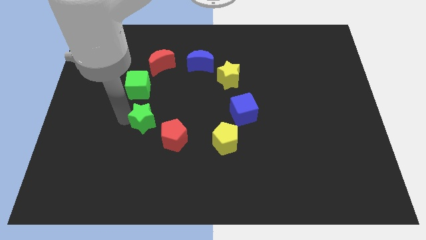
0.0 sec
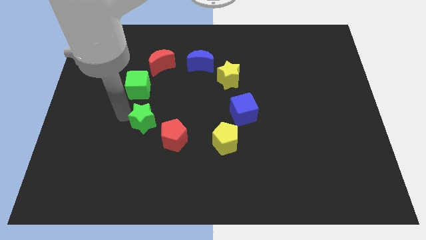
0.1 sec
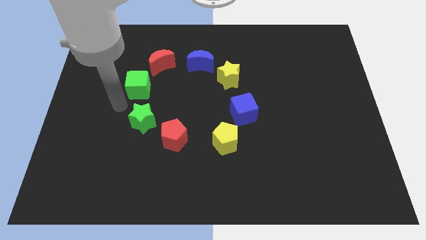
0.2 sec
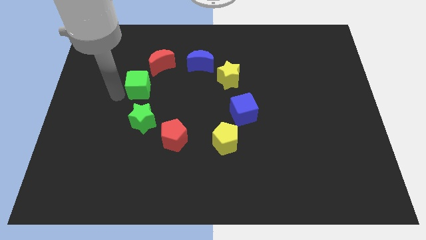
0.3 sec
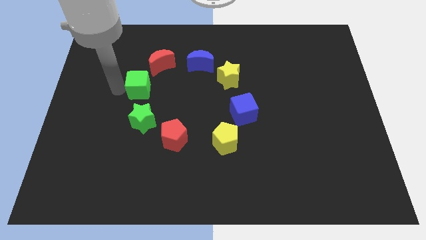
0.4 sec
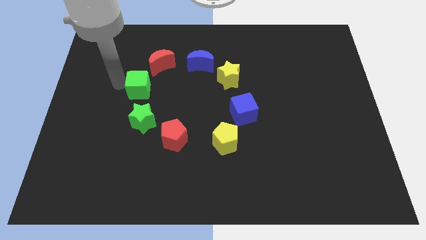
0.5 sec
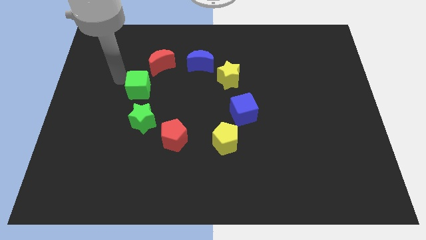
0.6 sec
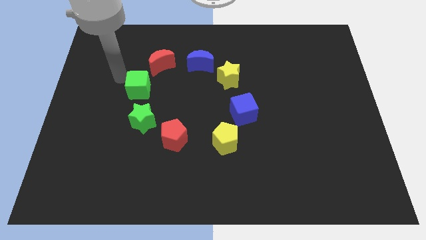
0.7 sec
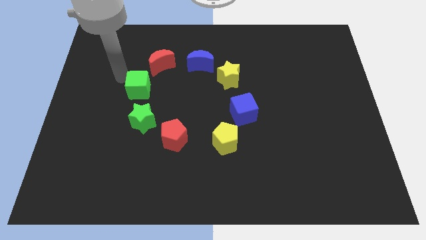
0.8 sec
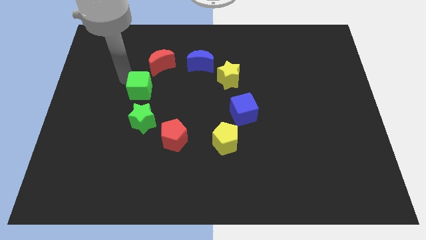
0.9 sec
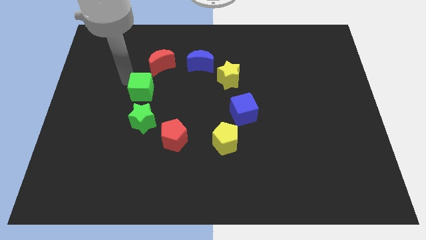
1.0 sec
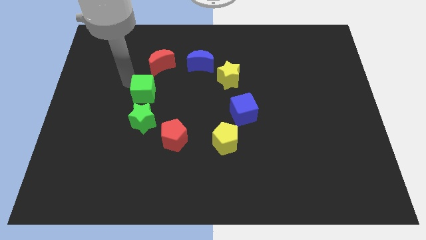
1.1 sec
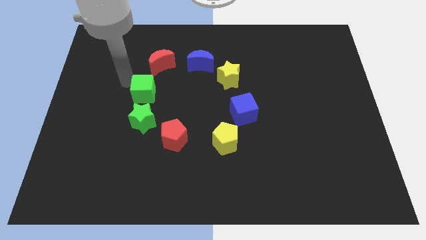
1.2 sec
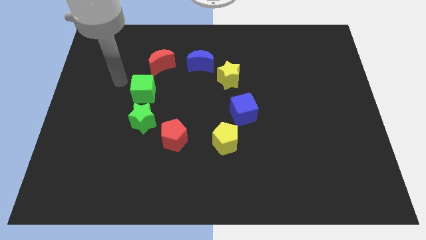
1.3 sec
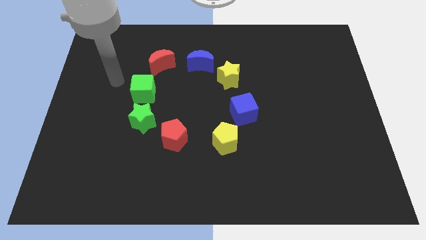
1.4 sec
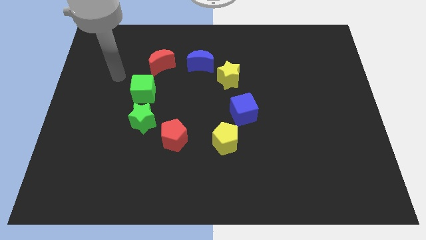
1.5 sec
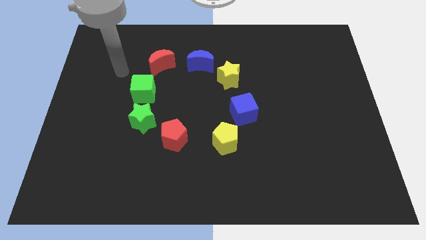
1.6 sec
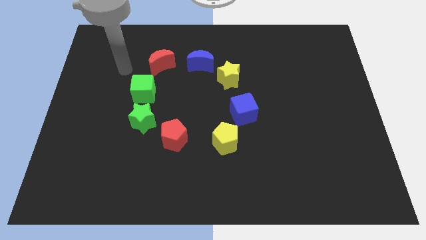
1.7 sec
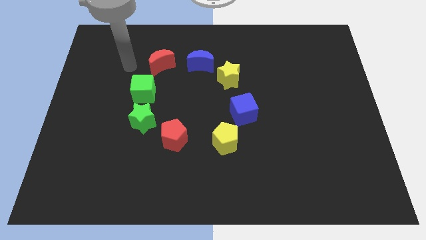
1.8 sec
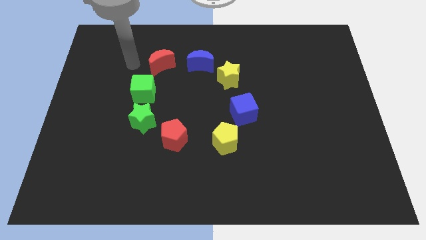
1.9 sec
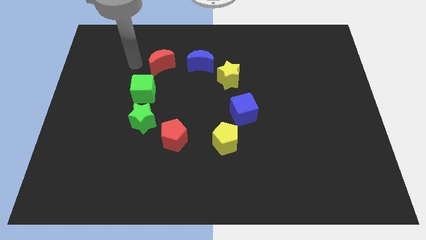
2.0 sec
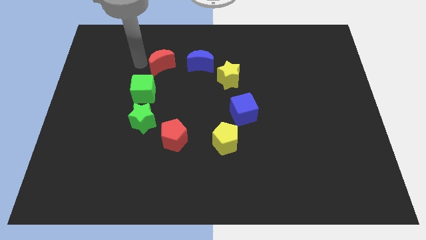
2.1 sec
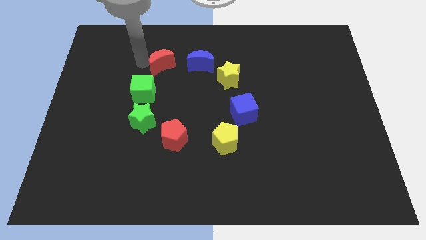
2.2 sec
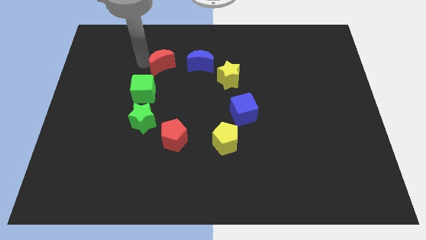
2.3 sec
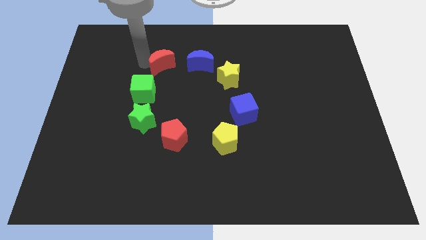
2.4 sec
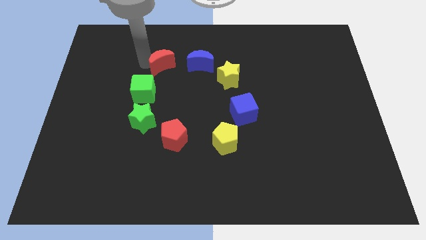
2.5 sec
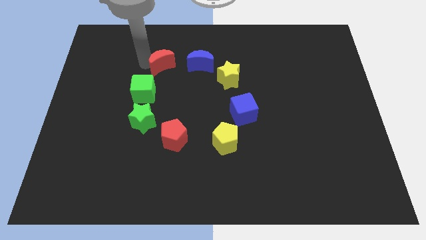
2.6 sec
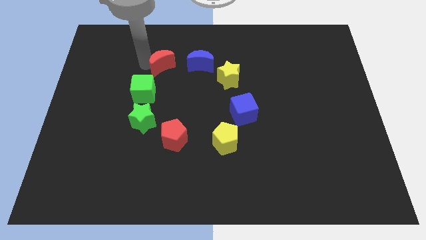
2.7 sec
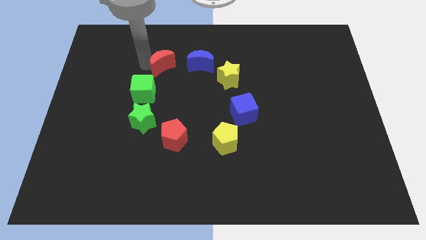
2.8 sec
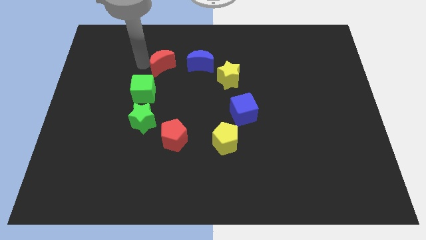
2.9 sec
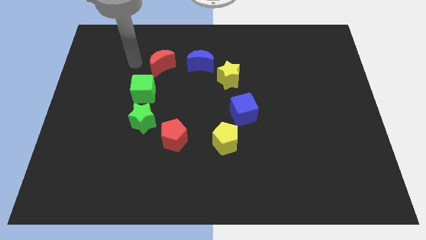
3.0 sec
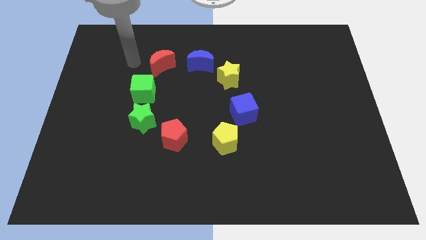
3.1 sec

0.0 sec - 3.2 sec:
move your arm towards the red moon

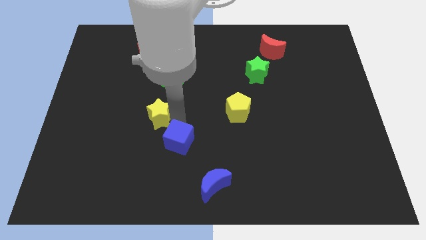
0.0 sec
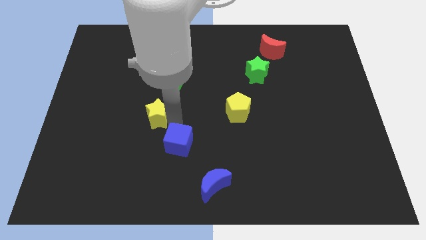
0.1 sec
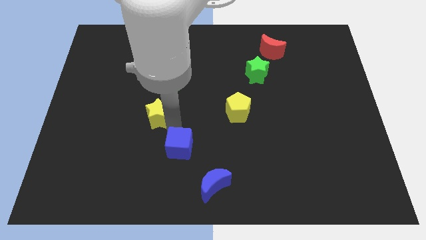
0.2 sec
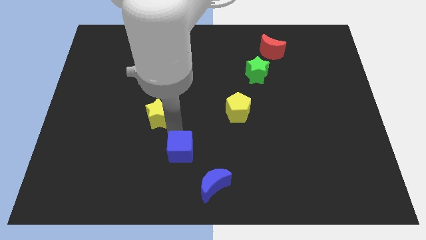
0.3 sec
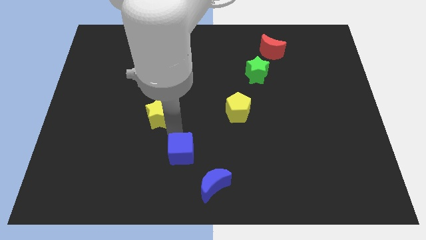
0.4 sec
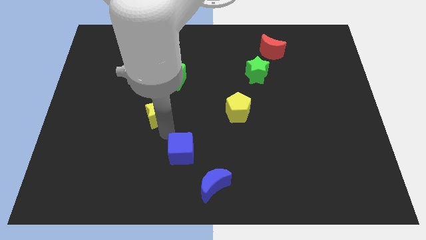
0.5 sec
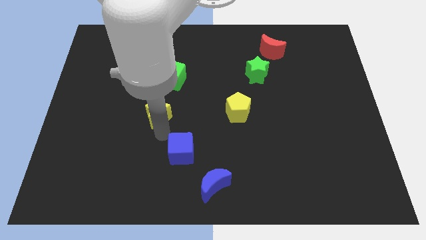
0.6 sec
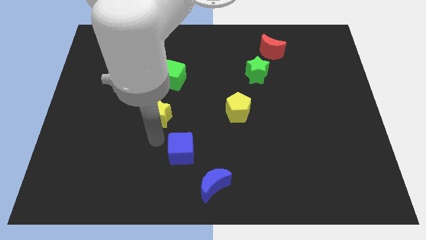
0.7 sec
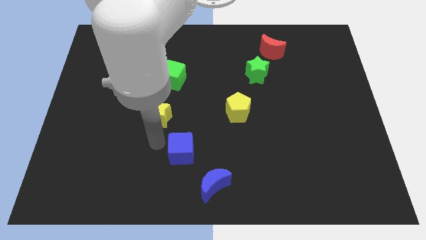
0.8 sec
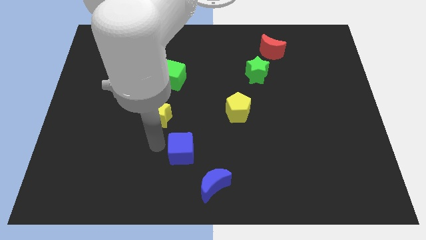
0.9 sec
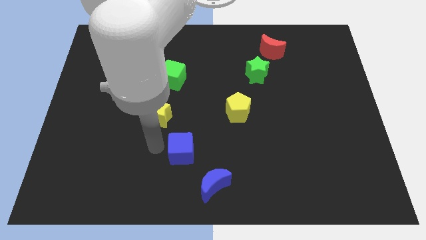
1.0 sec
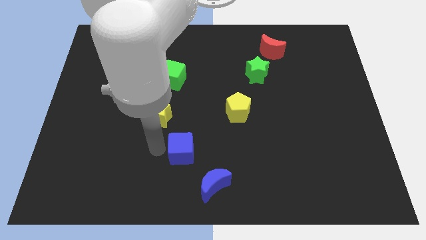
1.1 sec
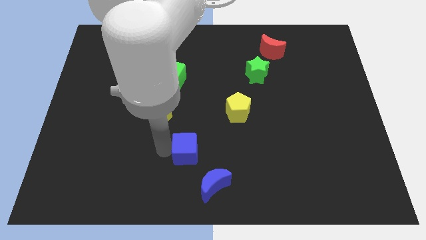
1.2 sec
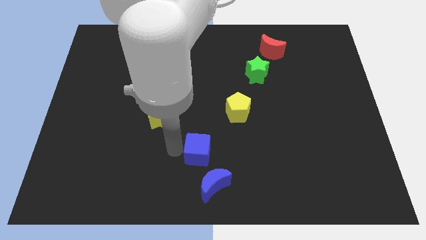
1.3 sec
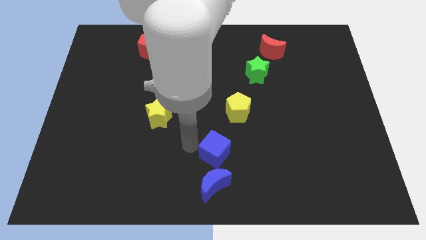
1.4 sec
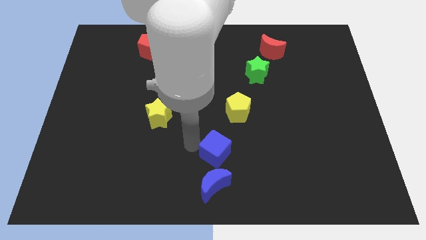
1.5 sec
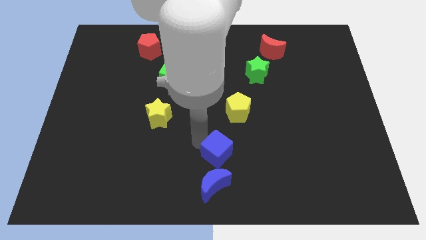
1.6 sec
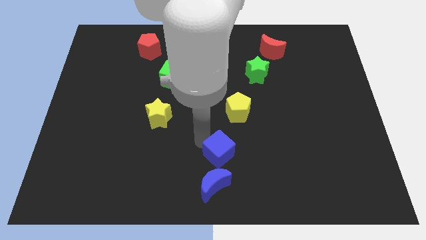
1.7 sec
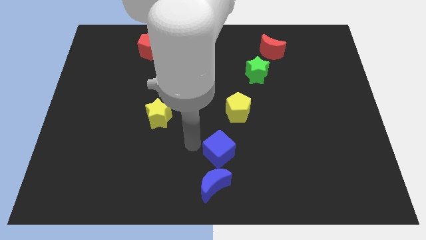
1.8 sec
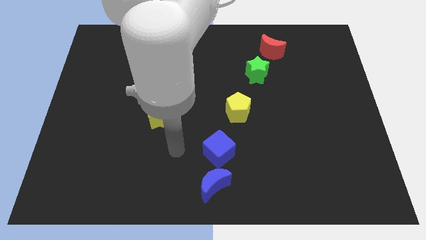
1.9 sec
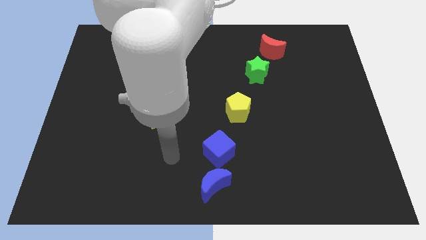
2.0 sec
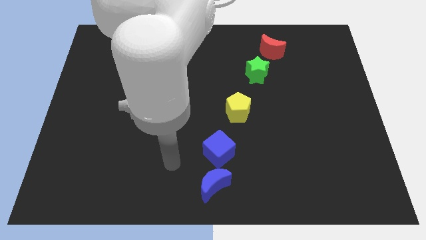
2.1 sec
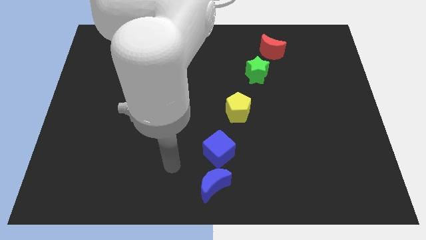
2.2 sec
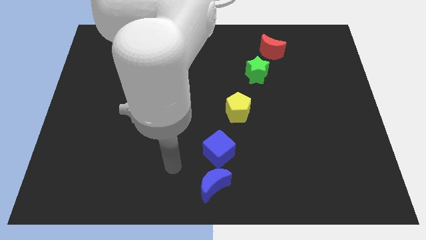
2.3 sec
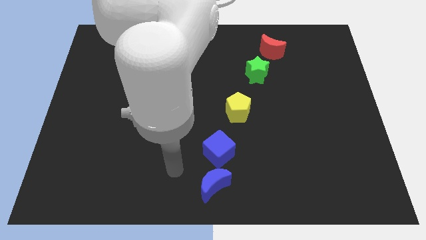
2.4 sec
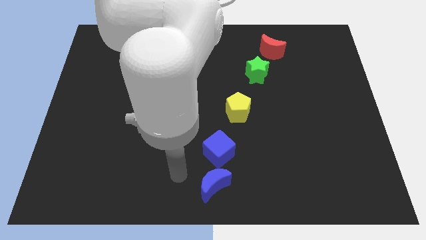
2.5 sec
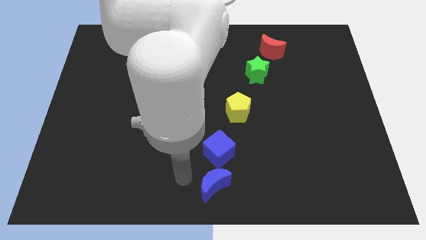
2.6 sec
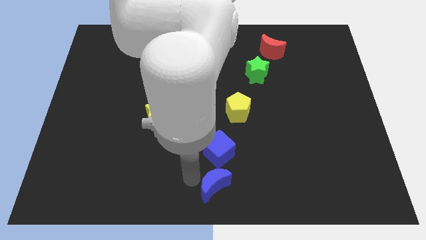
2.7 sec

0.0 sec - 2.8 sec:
place blue cube to the top of blue crescent

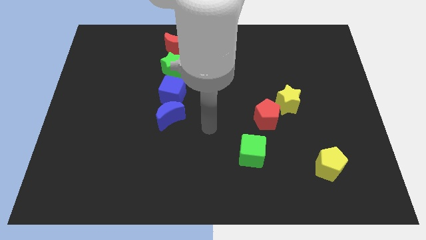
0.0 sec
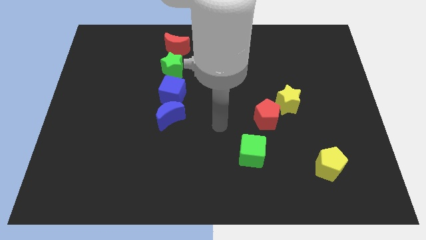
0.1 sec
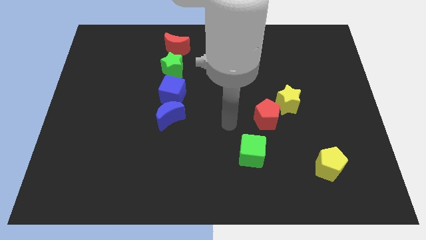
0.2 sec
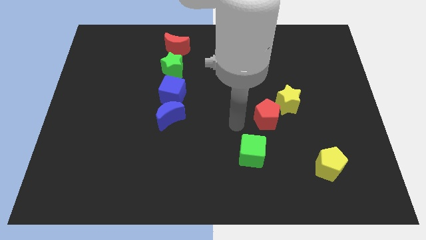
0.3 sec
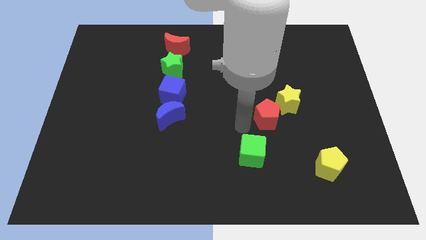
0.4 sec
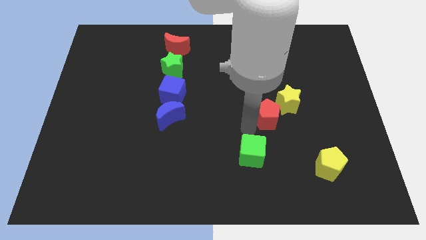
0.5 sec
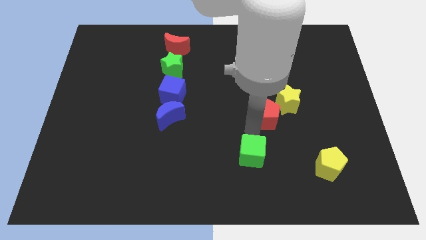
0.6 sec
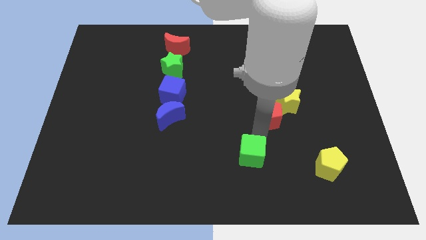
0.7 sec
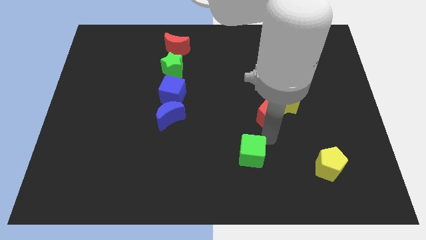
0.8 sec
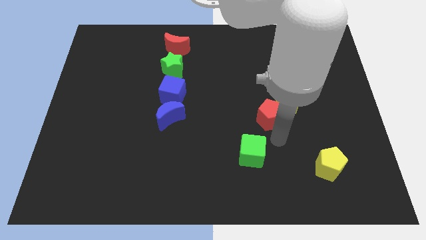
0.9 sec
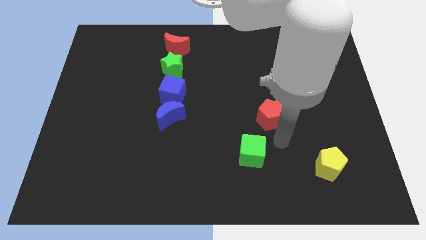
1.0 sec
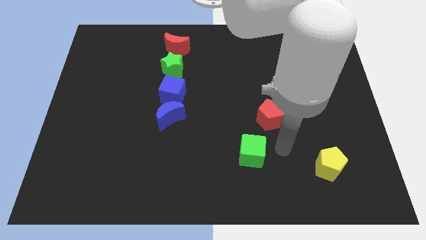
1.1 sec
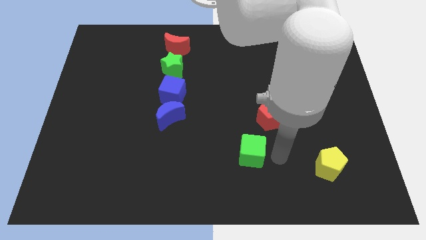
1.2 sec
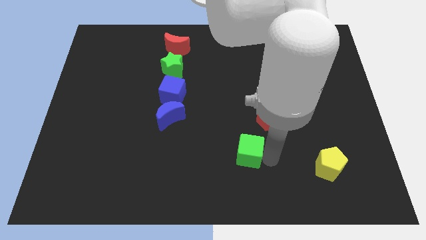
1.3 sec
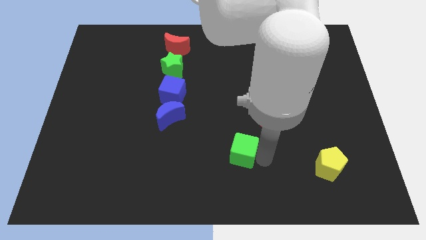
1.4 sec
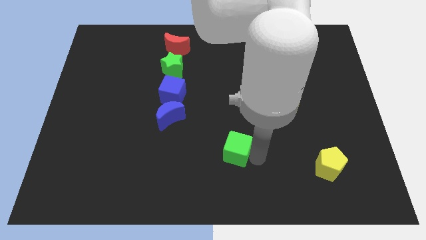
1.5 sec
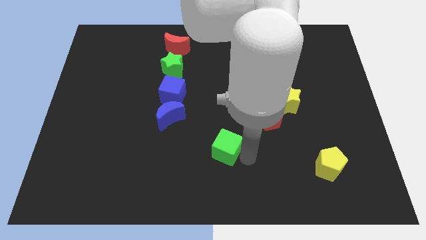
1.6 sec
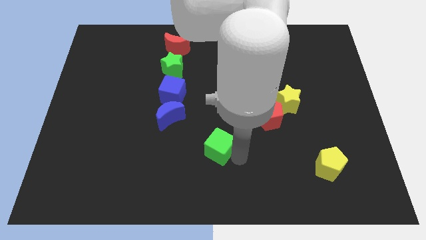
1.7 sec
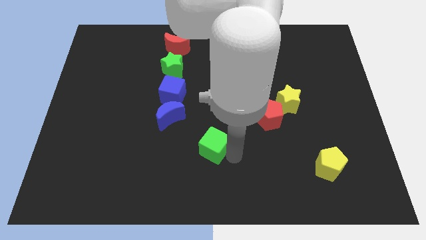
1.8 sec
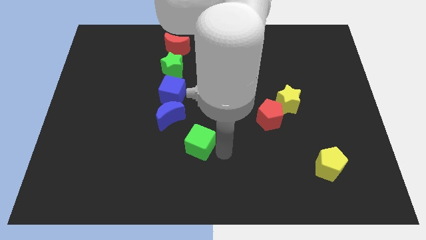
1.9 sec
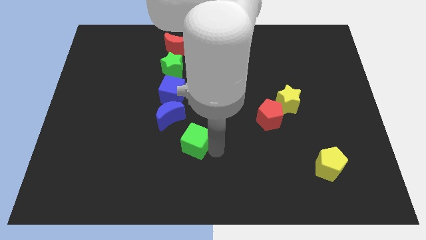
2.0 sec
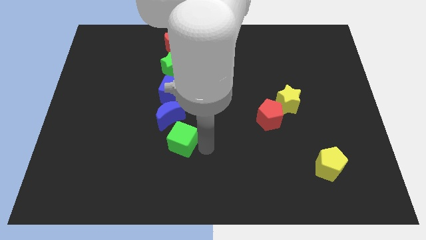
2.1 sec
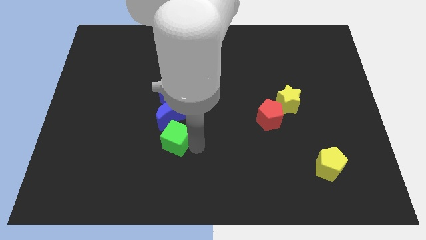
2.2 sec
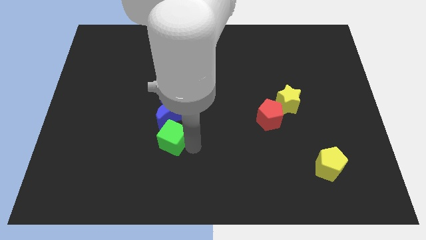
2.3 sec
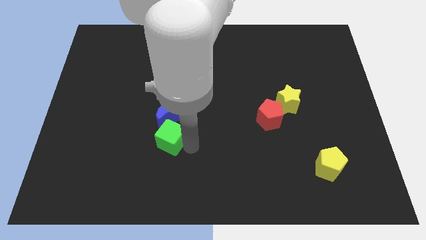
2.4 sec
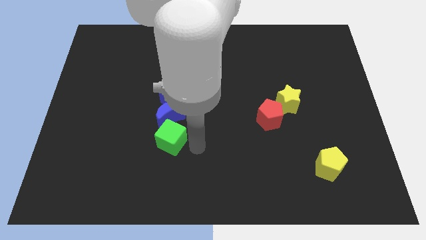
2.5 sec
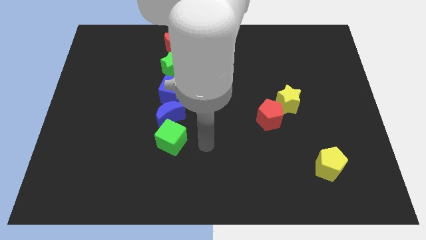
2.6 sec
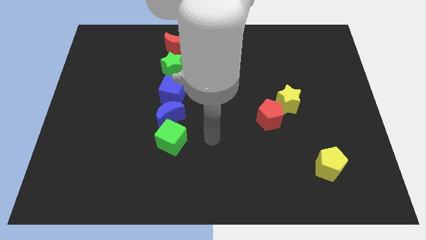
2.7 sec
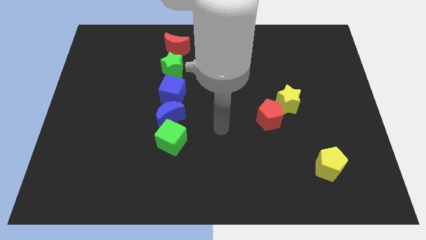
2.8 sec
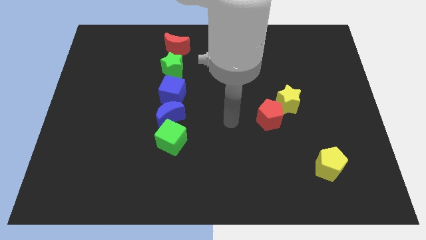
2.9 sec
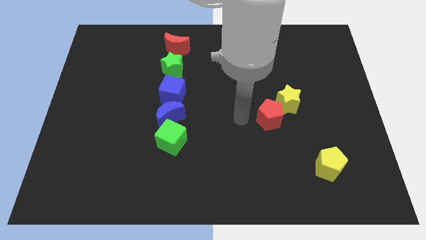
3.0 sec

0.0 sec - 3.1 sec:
place the green cube below the blue crescent
